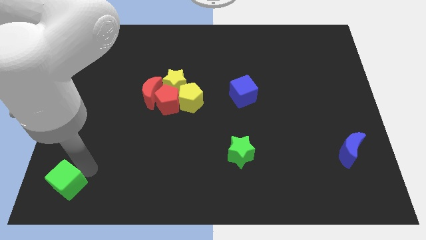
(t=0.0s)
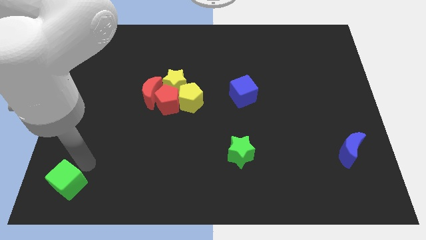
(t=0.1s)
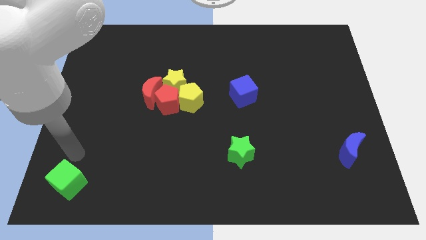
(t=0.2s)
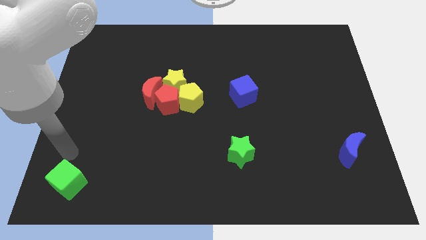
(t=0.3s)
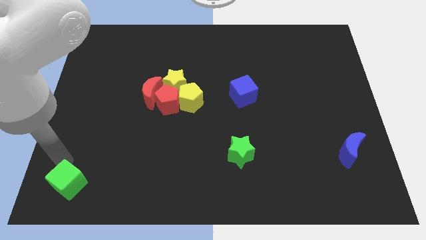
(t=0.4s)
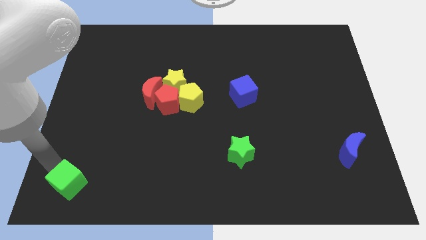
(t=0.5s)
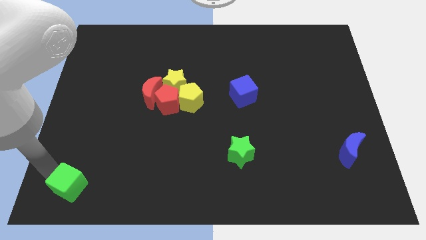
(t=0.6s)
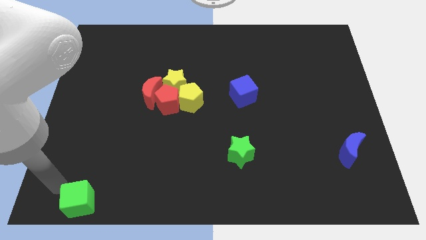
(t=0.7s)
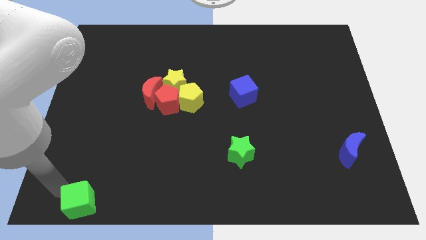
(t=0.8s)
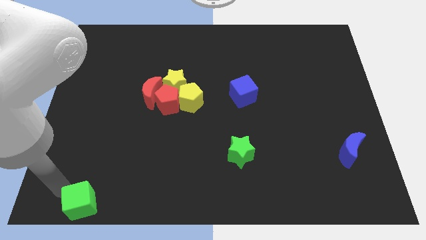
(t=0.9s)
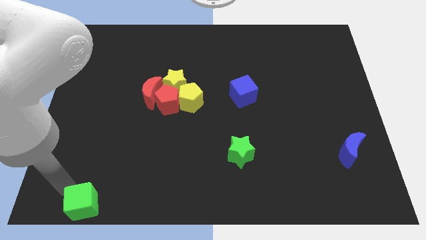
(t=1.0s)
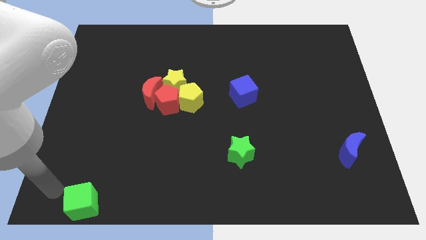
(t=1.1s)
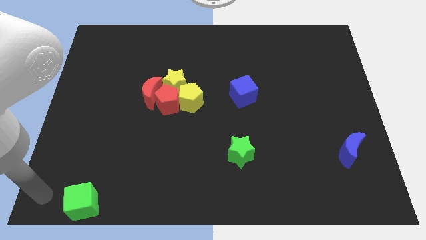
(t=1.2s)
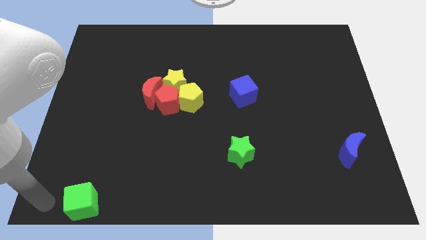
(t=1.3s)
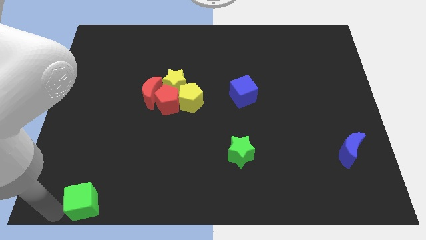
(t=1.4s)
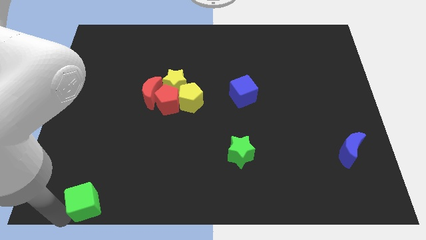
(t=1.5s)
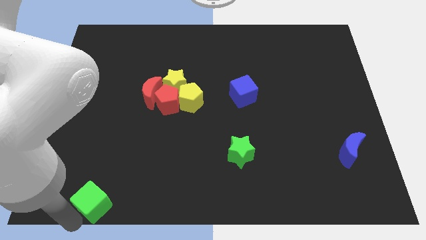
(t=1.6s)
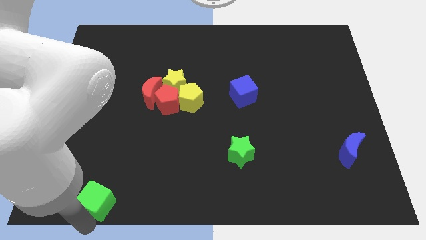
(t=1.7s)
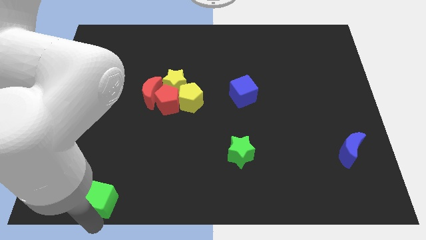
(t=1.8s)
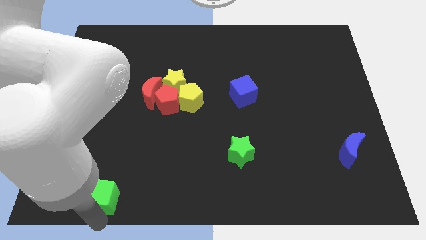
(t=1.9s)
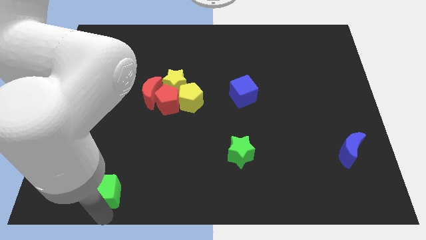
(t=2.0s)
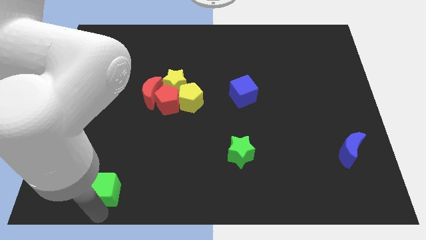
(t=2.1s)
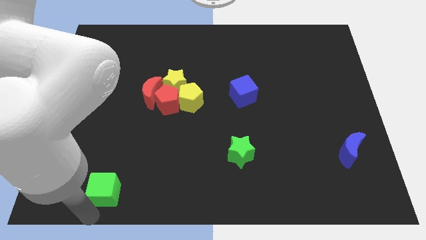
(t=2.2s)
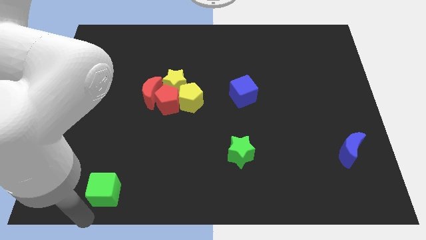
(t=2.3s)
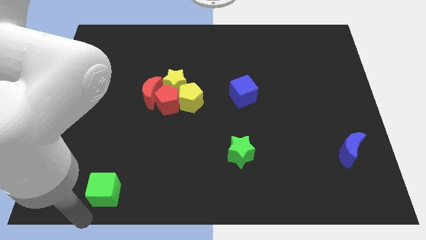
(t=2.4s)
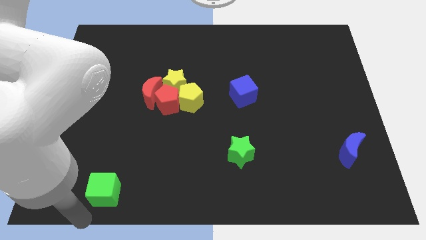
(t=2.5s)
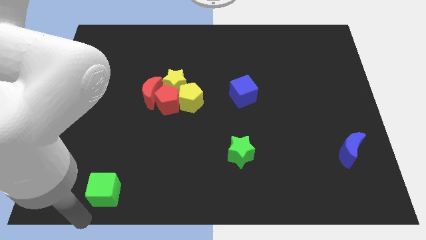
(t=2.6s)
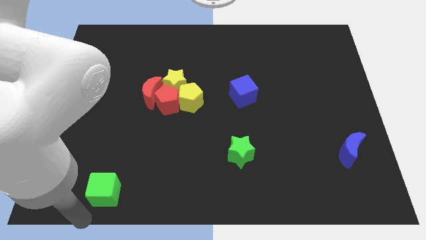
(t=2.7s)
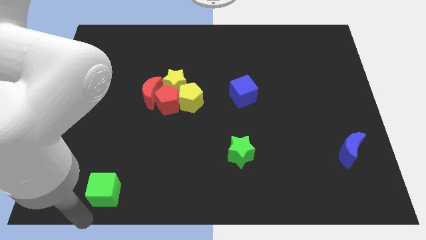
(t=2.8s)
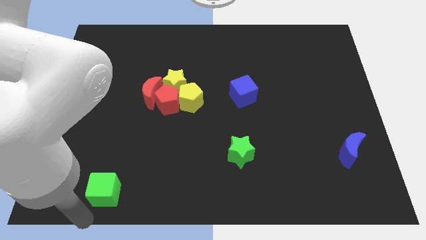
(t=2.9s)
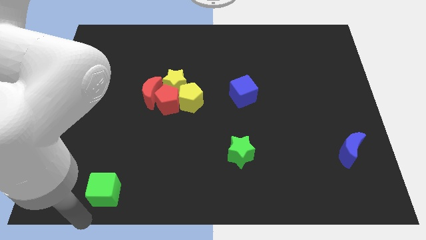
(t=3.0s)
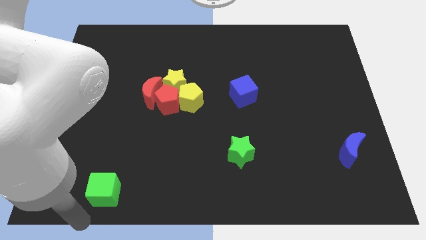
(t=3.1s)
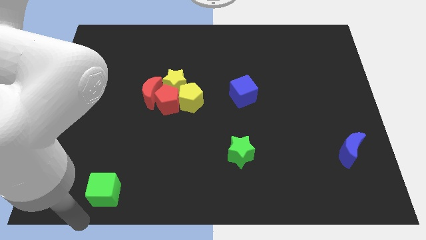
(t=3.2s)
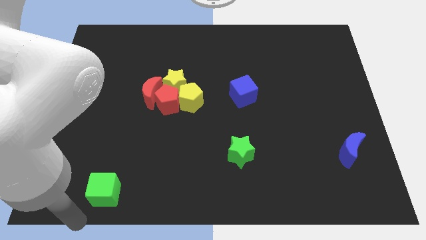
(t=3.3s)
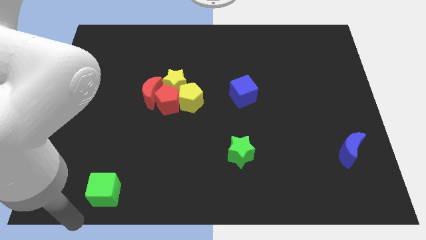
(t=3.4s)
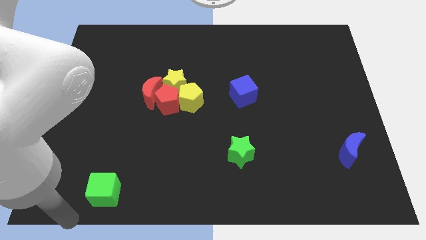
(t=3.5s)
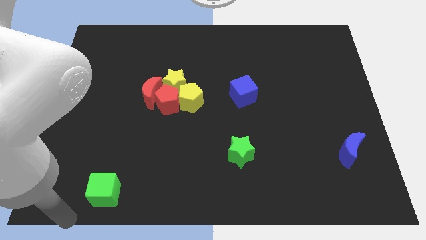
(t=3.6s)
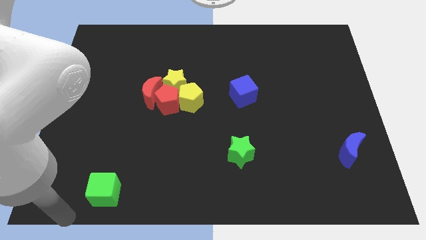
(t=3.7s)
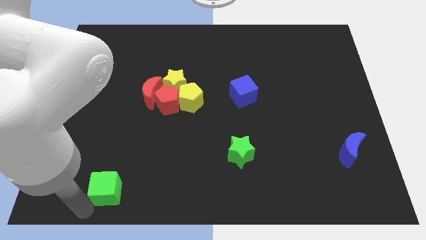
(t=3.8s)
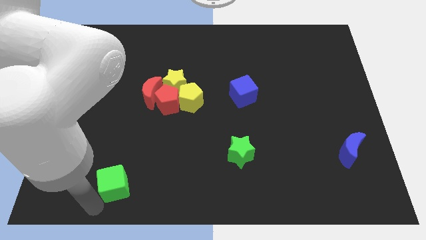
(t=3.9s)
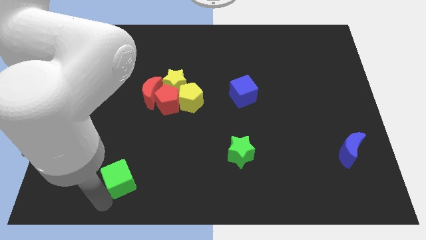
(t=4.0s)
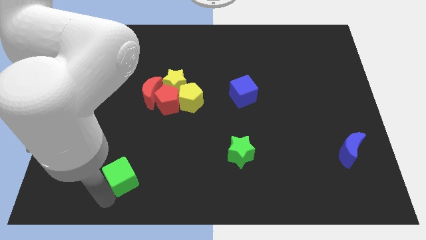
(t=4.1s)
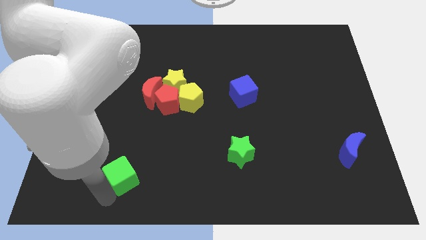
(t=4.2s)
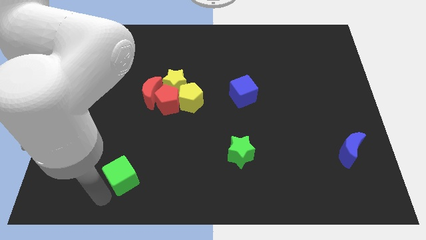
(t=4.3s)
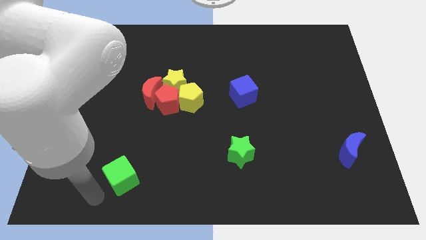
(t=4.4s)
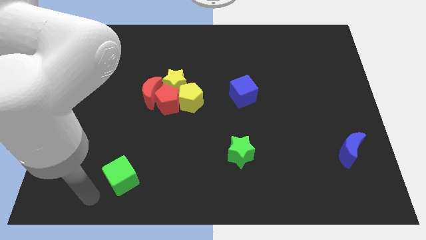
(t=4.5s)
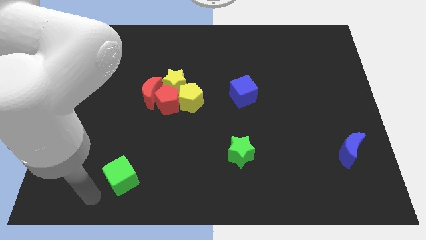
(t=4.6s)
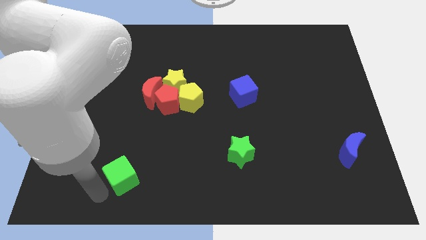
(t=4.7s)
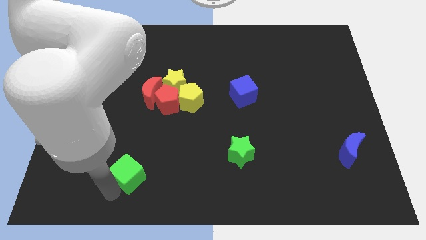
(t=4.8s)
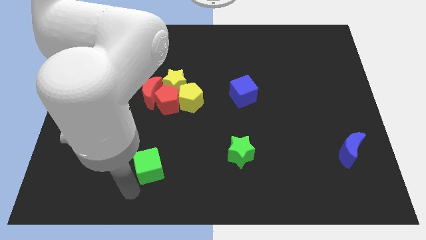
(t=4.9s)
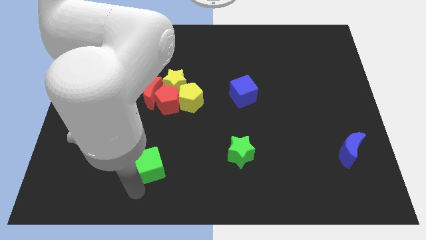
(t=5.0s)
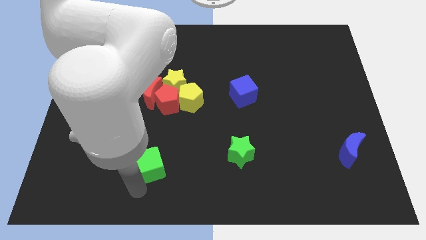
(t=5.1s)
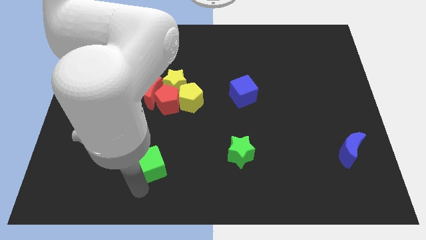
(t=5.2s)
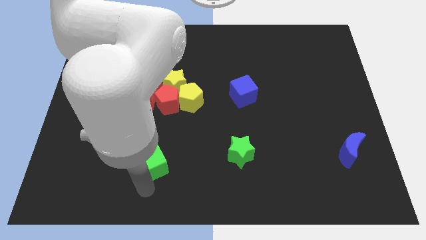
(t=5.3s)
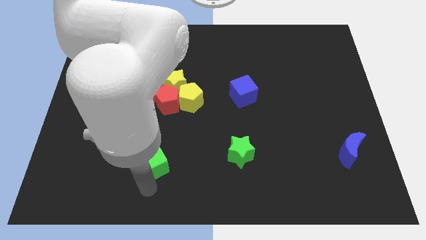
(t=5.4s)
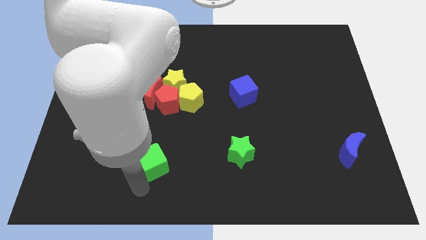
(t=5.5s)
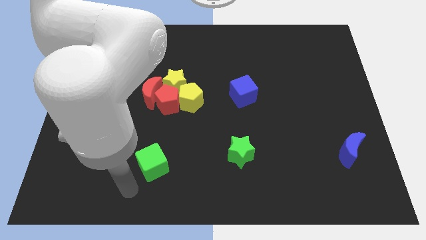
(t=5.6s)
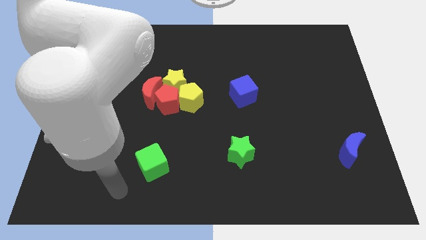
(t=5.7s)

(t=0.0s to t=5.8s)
push the green cube towards the bottom center of the board

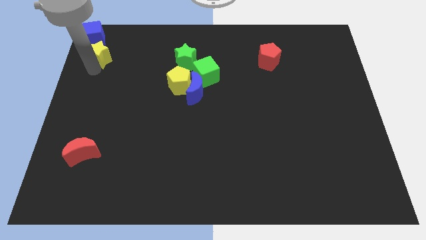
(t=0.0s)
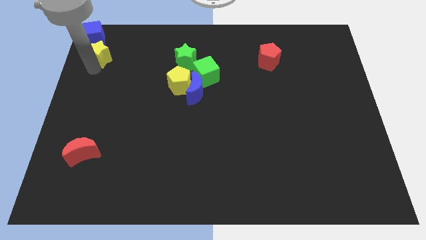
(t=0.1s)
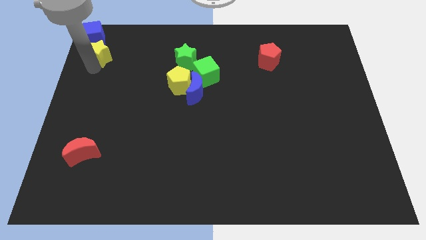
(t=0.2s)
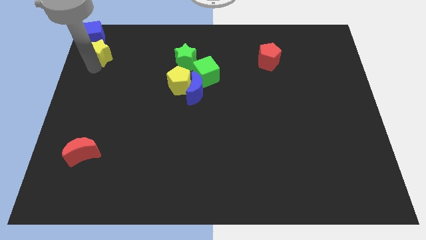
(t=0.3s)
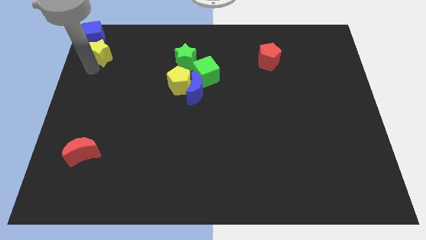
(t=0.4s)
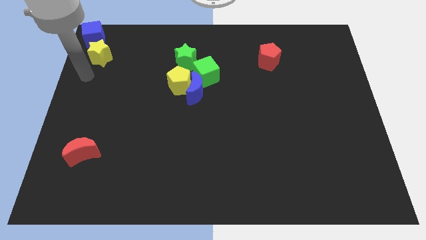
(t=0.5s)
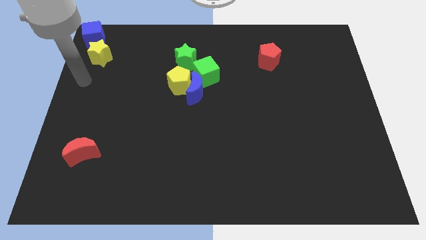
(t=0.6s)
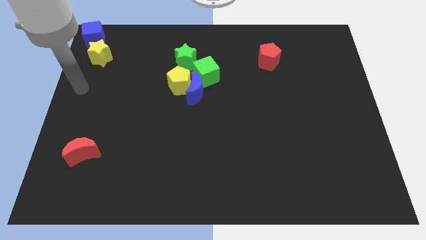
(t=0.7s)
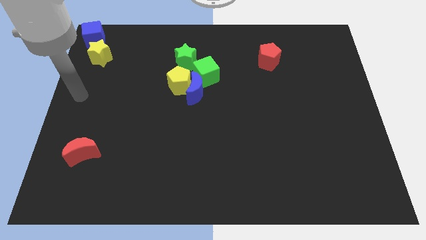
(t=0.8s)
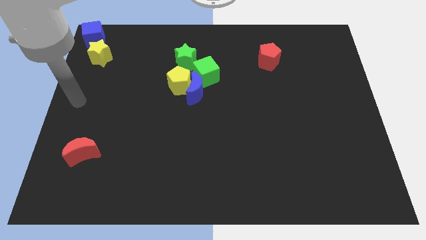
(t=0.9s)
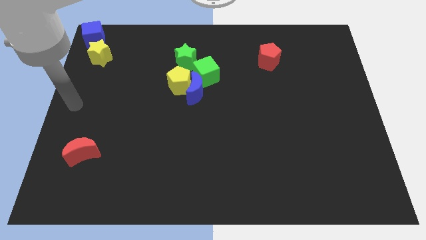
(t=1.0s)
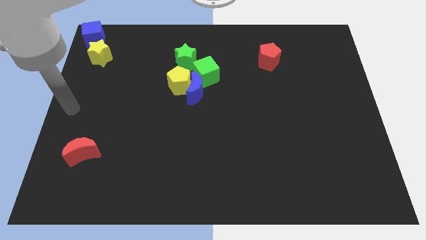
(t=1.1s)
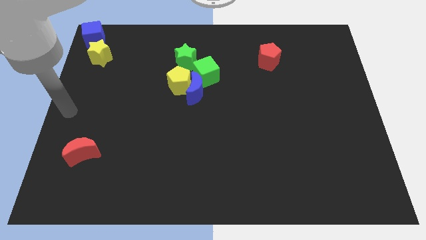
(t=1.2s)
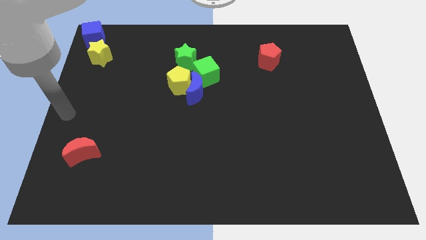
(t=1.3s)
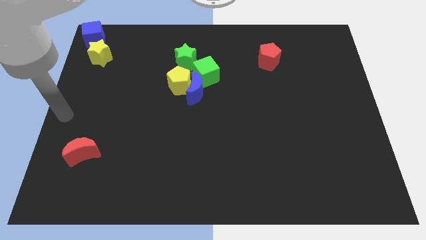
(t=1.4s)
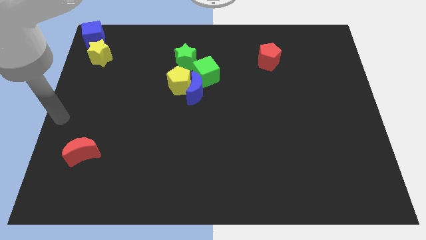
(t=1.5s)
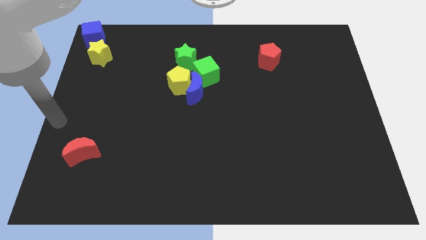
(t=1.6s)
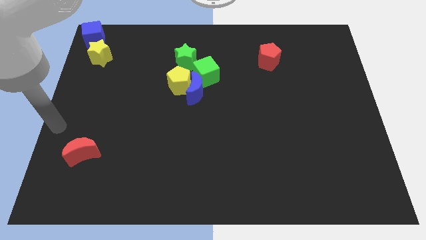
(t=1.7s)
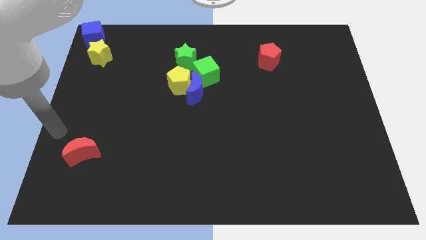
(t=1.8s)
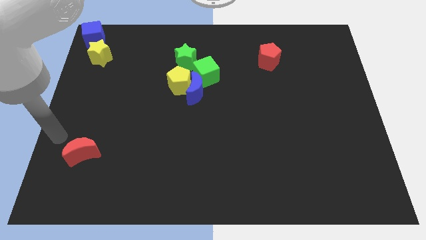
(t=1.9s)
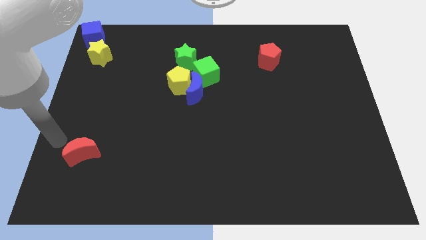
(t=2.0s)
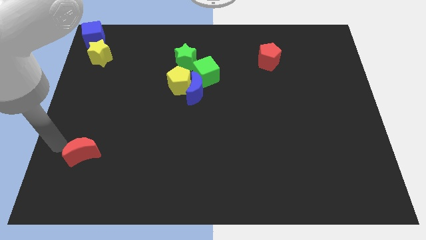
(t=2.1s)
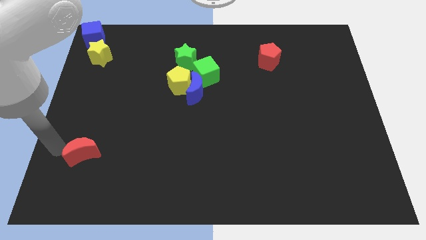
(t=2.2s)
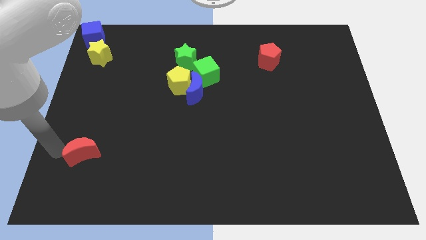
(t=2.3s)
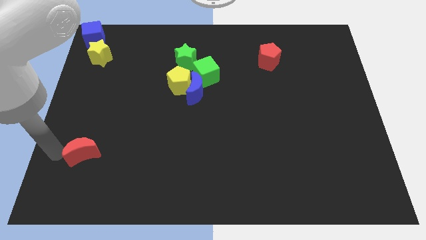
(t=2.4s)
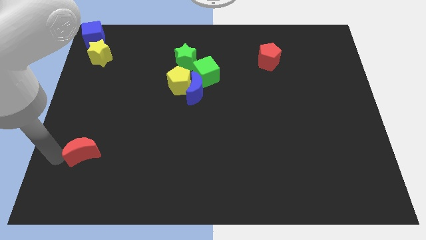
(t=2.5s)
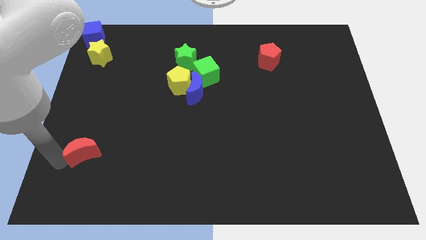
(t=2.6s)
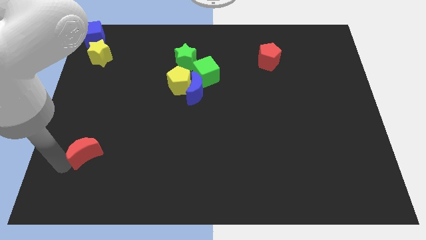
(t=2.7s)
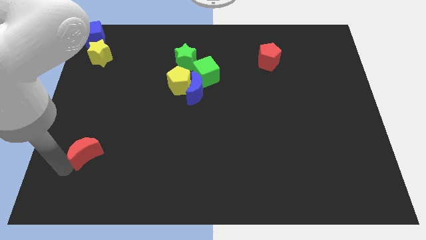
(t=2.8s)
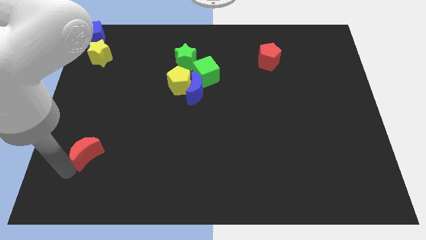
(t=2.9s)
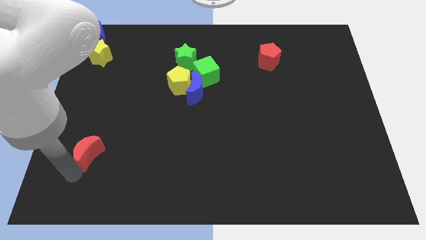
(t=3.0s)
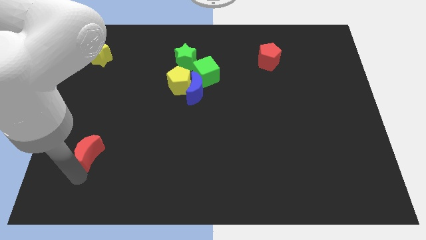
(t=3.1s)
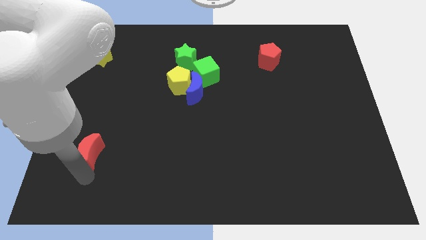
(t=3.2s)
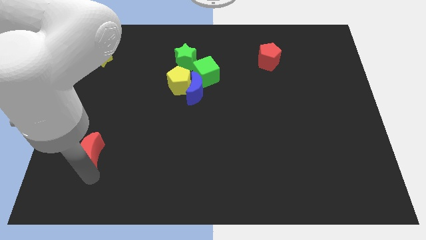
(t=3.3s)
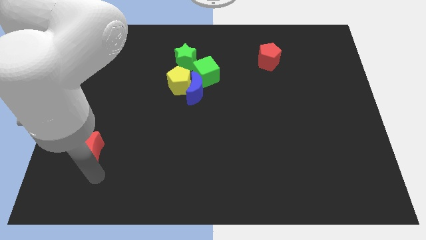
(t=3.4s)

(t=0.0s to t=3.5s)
touch the bottom of red crescent
